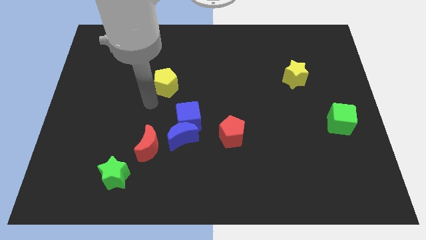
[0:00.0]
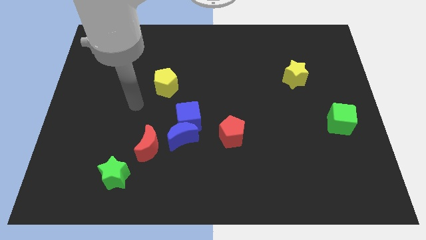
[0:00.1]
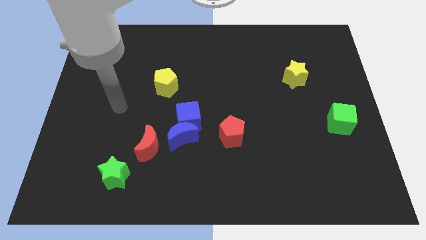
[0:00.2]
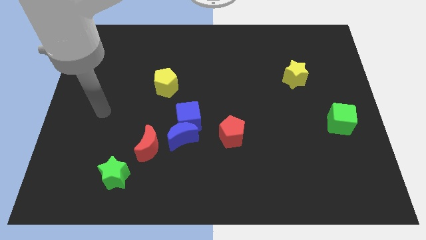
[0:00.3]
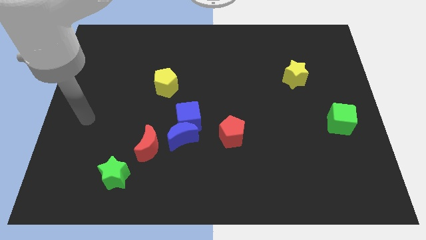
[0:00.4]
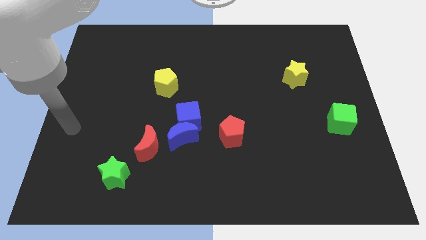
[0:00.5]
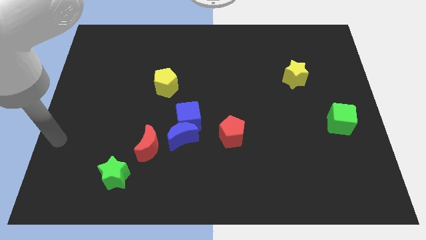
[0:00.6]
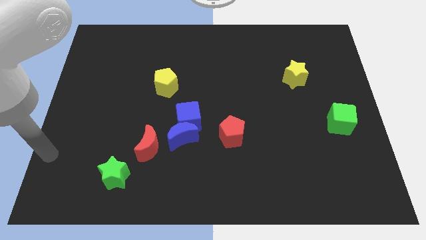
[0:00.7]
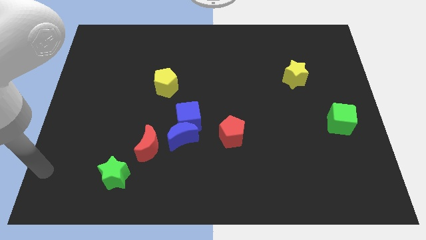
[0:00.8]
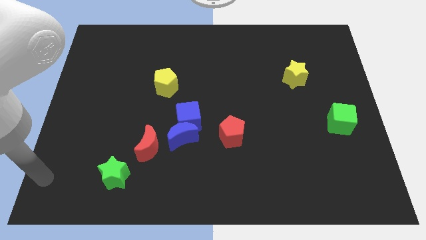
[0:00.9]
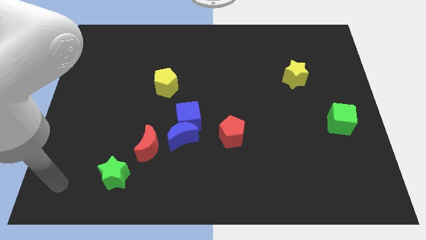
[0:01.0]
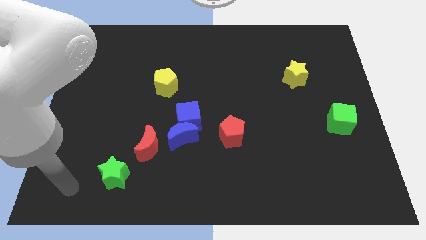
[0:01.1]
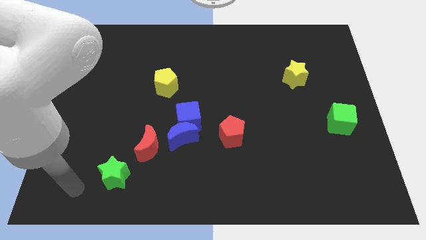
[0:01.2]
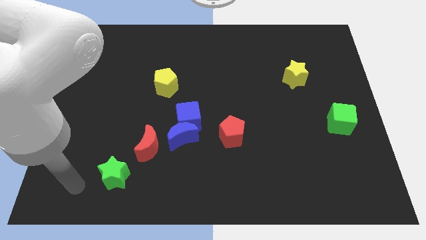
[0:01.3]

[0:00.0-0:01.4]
move your arm to the left of green star

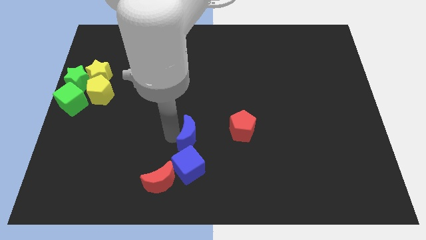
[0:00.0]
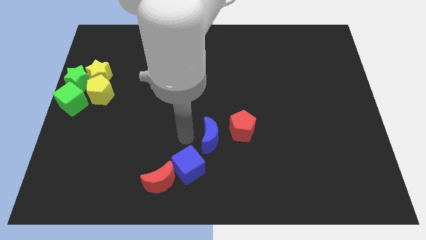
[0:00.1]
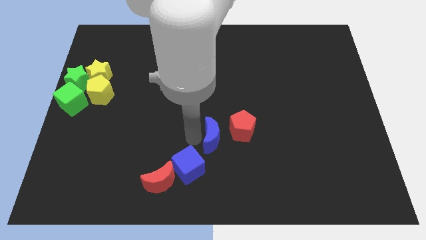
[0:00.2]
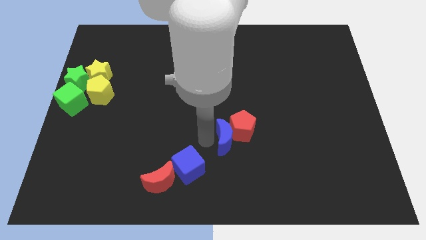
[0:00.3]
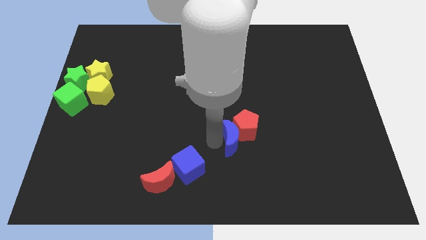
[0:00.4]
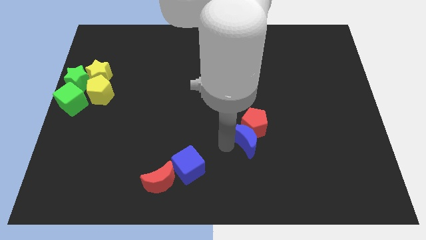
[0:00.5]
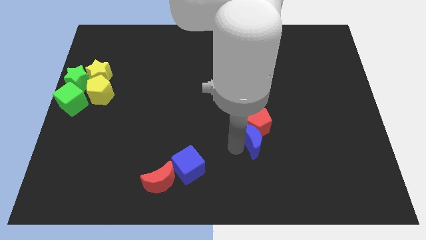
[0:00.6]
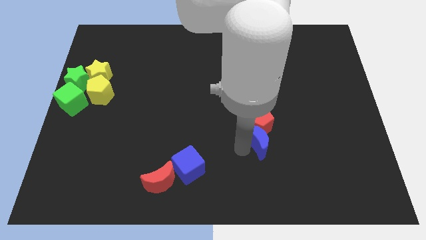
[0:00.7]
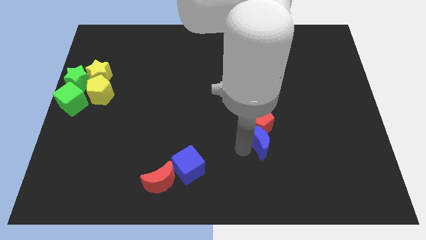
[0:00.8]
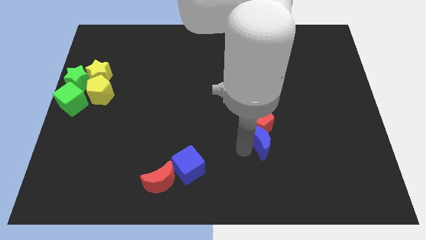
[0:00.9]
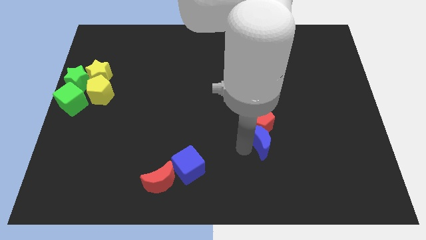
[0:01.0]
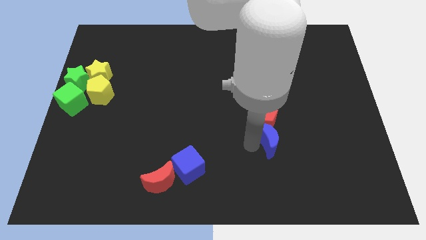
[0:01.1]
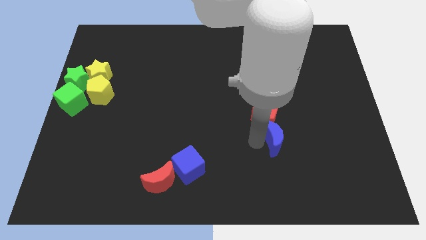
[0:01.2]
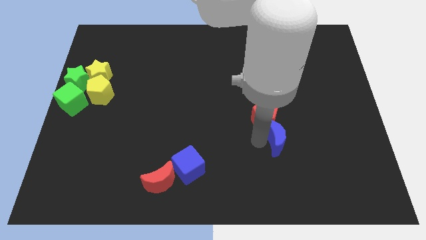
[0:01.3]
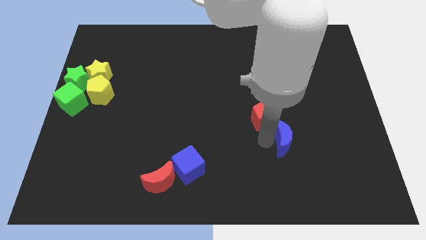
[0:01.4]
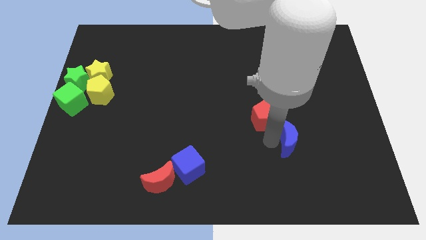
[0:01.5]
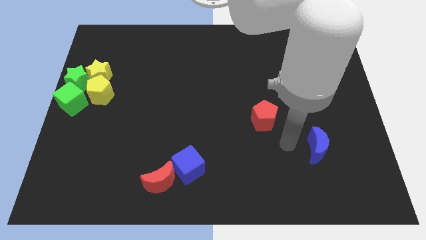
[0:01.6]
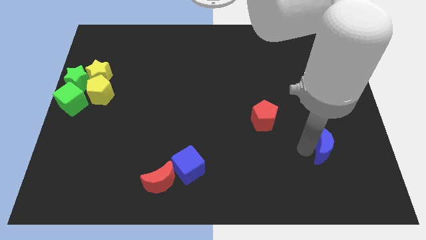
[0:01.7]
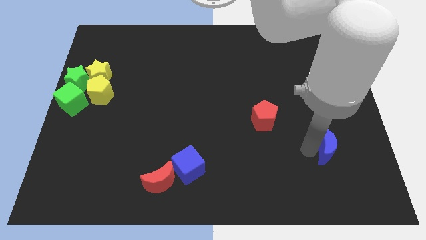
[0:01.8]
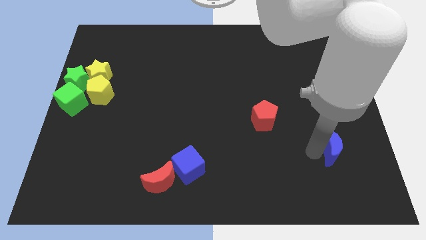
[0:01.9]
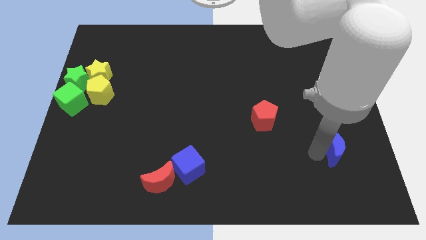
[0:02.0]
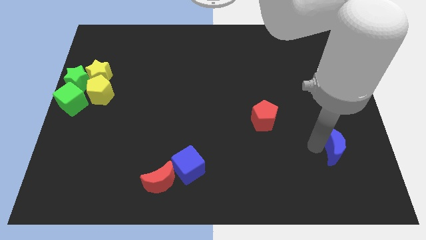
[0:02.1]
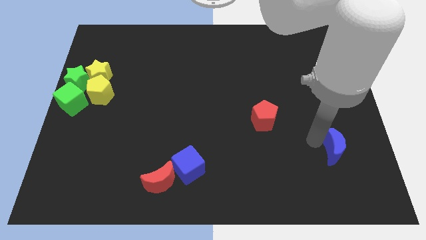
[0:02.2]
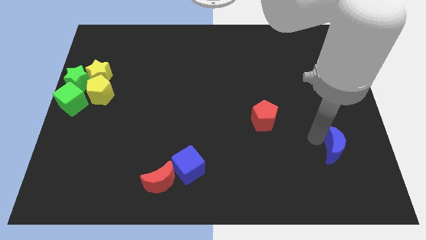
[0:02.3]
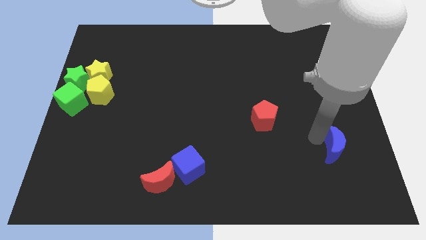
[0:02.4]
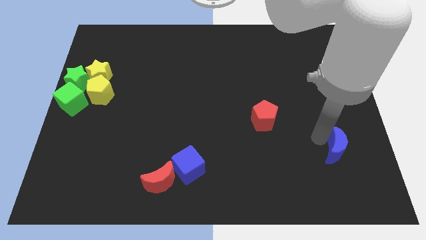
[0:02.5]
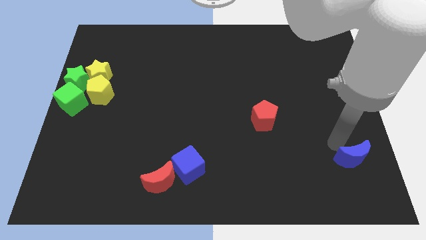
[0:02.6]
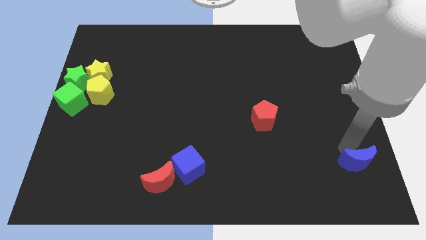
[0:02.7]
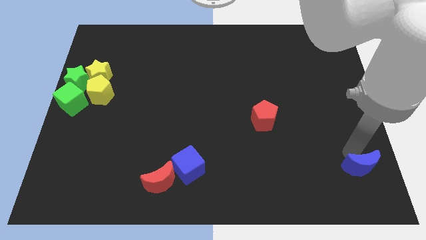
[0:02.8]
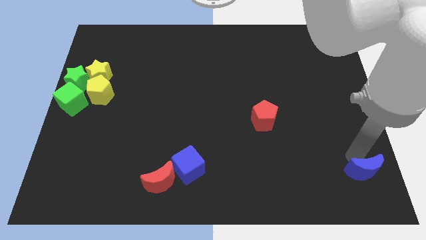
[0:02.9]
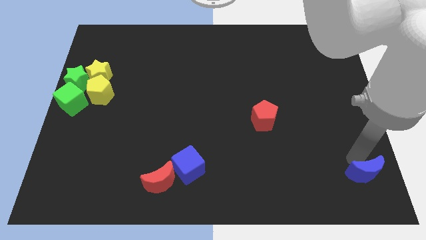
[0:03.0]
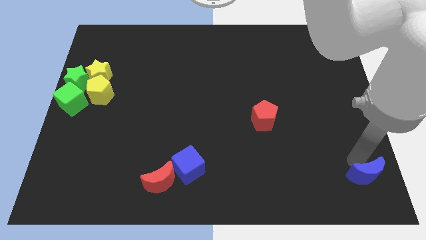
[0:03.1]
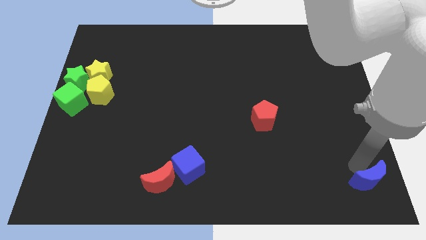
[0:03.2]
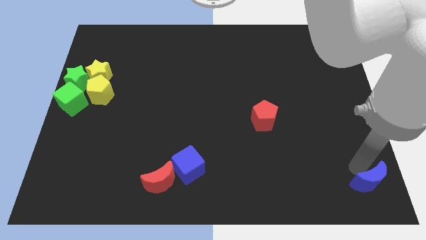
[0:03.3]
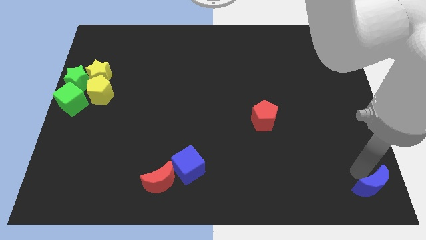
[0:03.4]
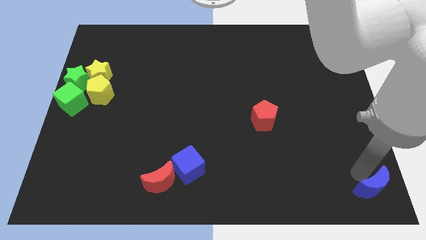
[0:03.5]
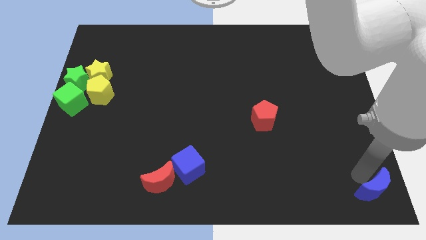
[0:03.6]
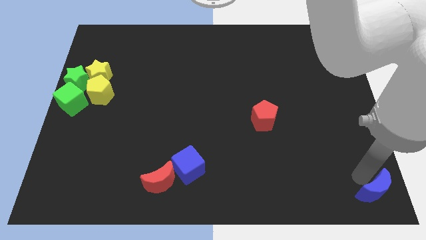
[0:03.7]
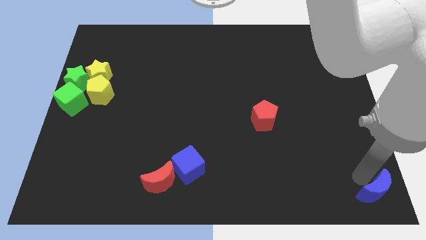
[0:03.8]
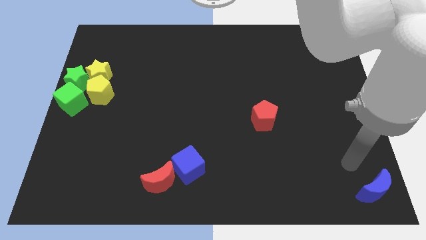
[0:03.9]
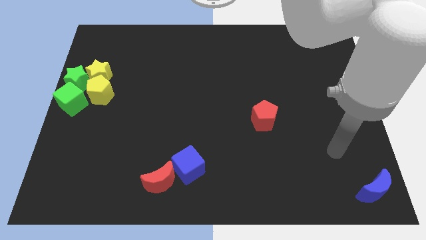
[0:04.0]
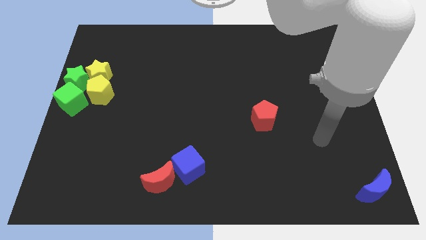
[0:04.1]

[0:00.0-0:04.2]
place blue moon to the bottom right corner of the board

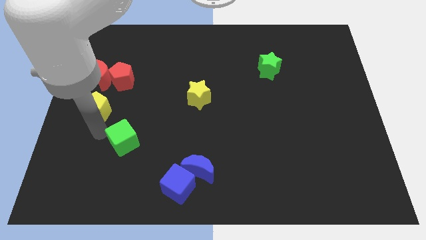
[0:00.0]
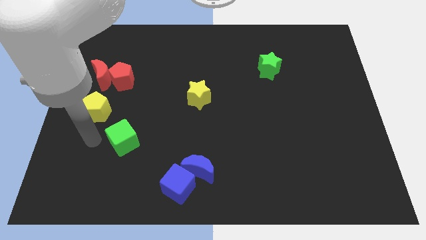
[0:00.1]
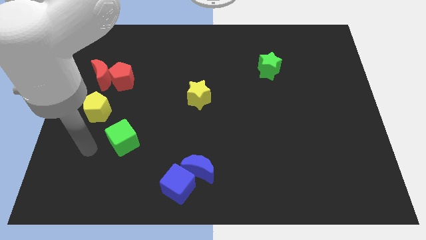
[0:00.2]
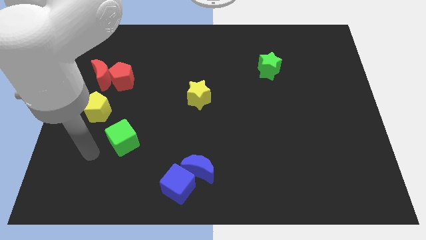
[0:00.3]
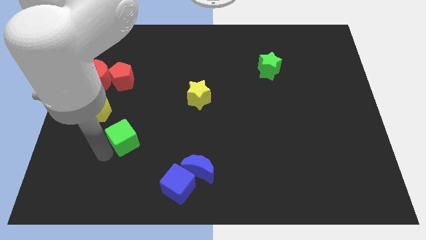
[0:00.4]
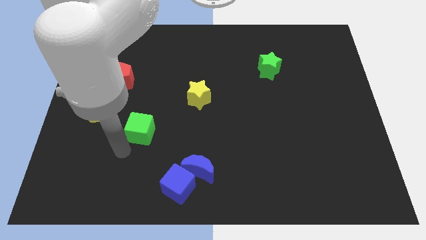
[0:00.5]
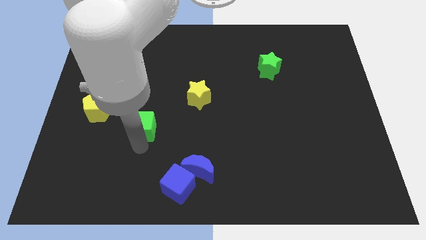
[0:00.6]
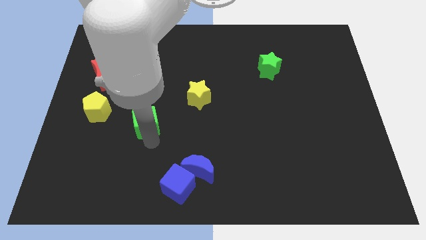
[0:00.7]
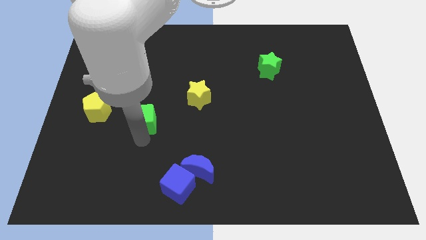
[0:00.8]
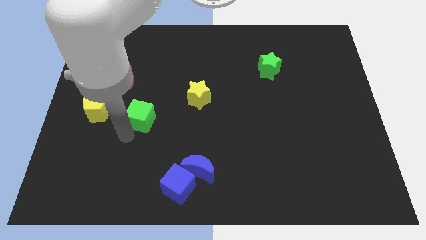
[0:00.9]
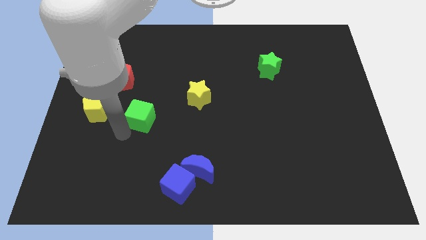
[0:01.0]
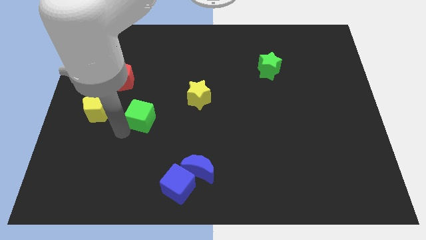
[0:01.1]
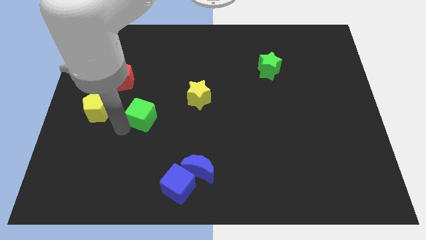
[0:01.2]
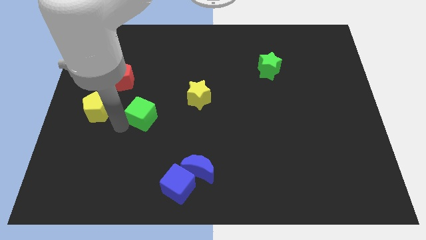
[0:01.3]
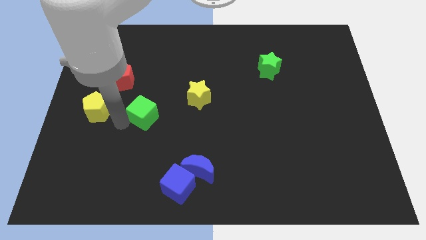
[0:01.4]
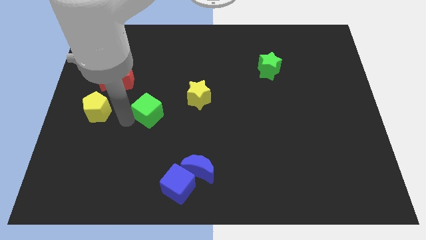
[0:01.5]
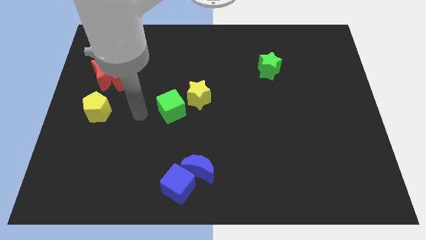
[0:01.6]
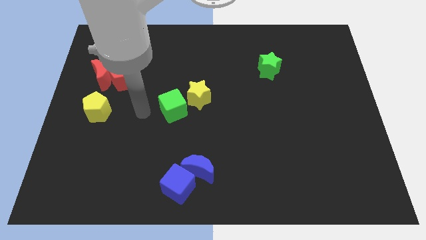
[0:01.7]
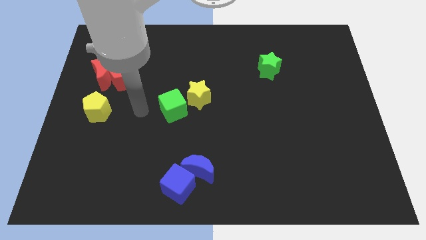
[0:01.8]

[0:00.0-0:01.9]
push the green cube close to the yellow star

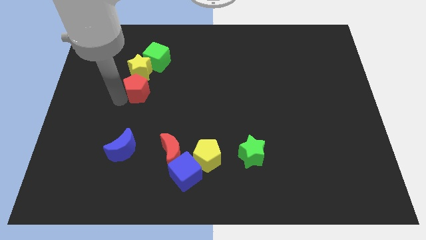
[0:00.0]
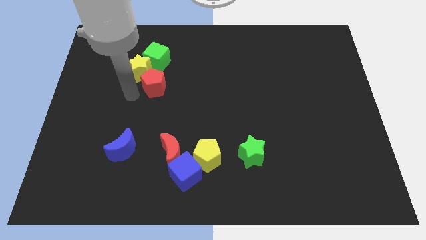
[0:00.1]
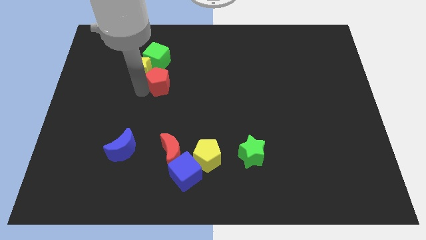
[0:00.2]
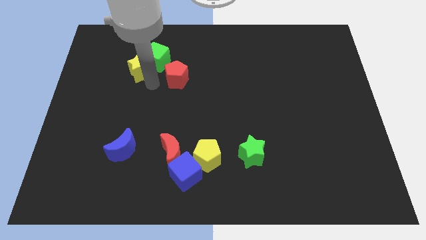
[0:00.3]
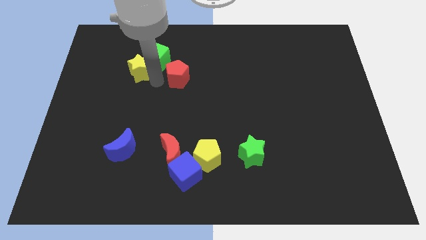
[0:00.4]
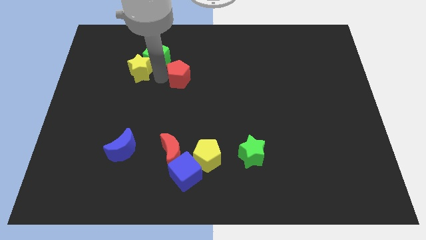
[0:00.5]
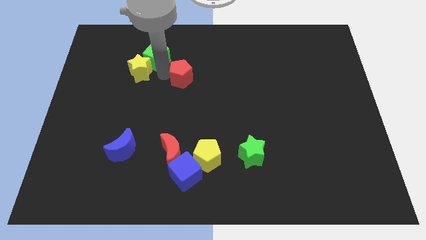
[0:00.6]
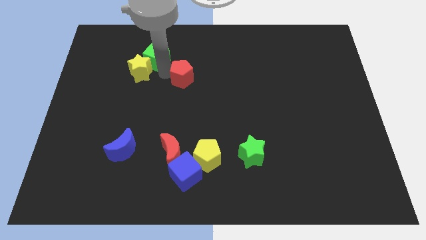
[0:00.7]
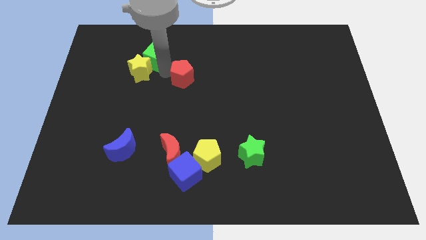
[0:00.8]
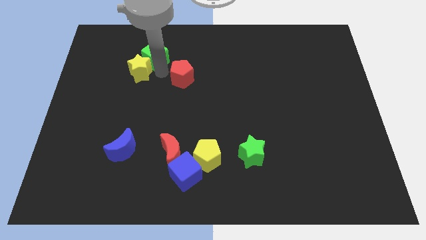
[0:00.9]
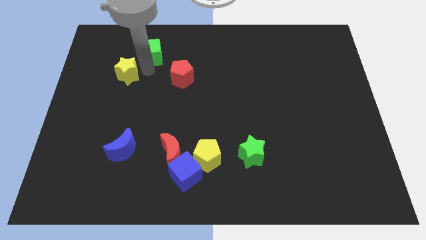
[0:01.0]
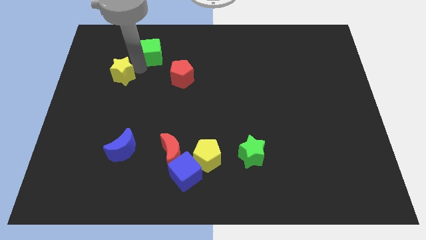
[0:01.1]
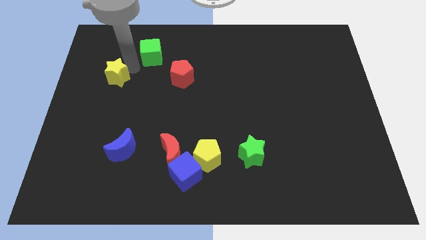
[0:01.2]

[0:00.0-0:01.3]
drag red pentagon towards the top center
